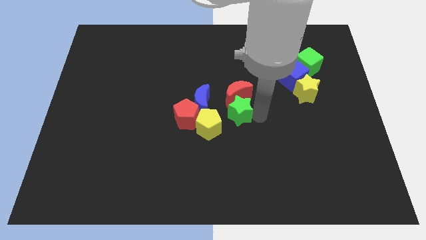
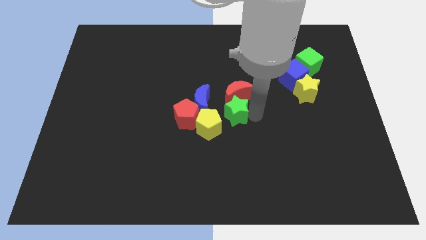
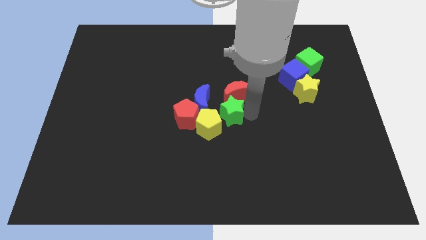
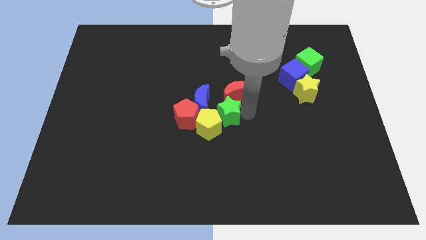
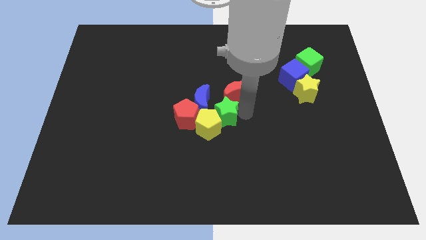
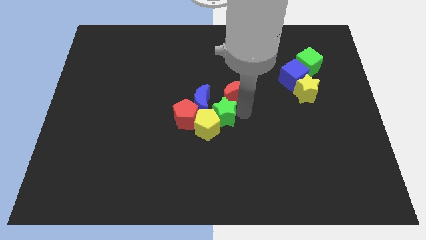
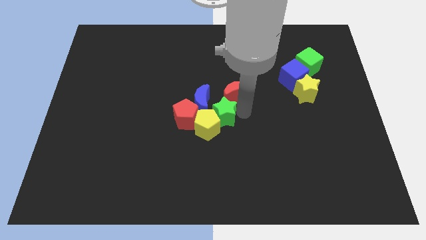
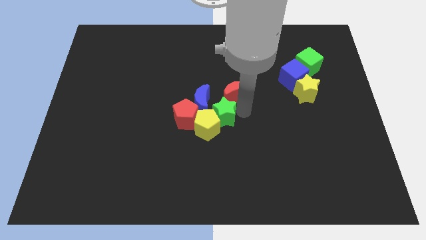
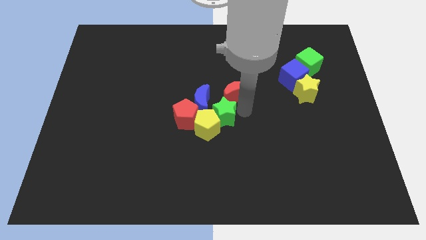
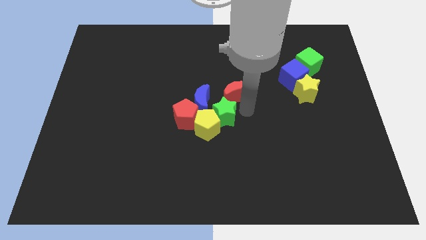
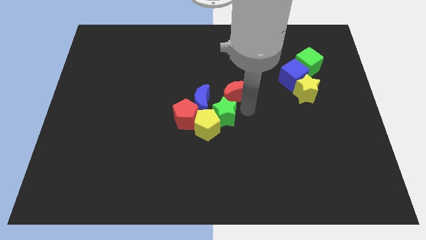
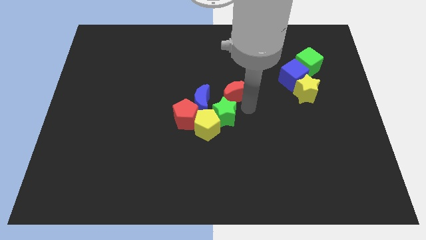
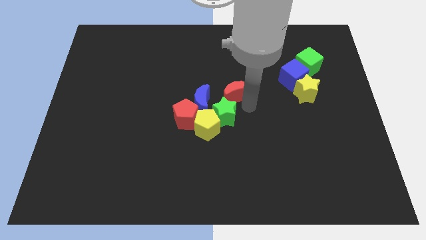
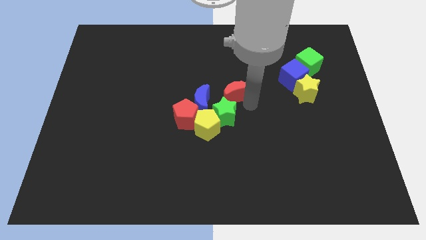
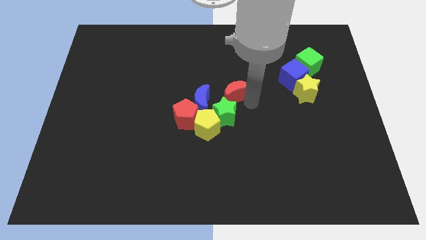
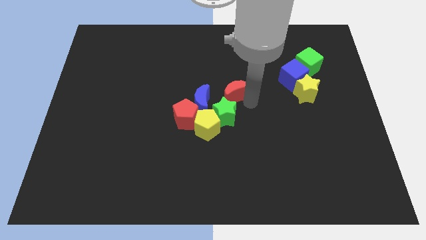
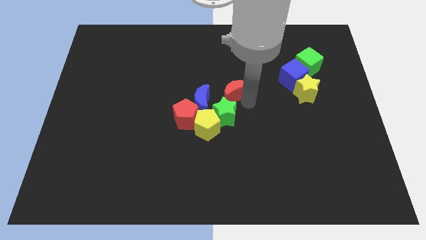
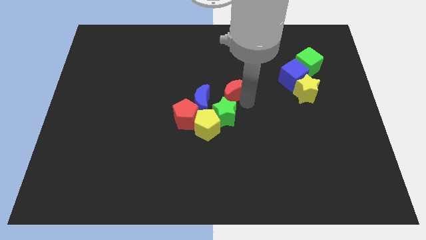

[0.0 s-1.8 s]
push the green star into the yellow pentagon

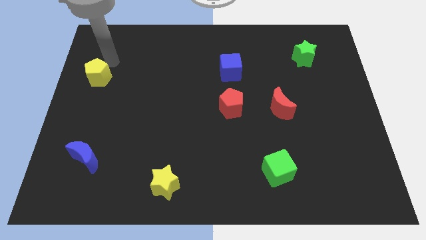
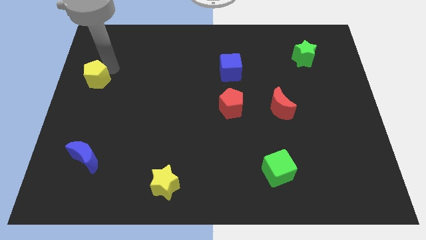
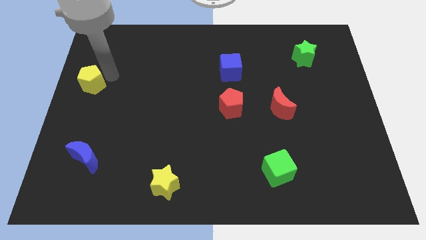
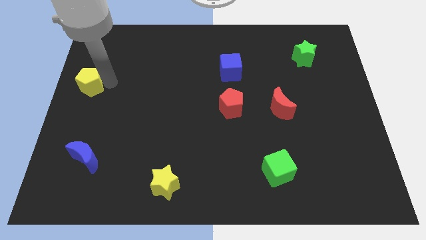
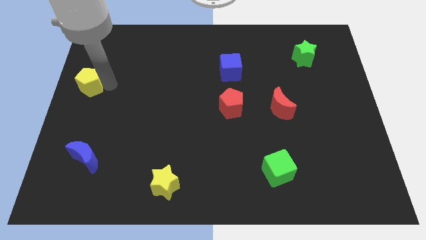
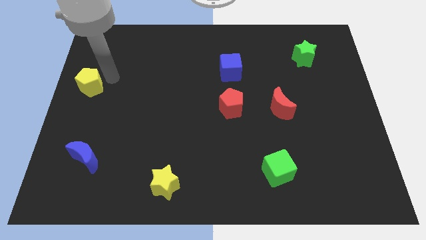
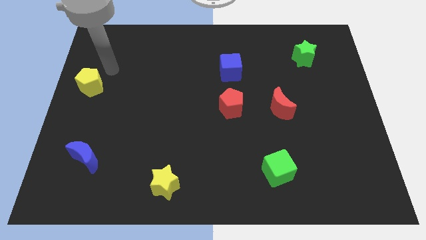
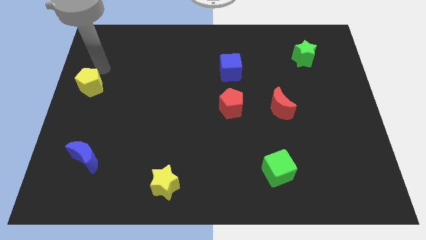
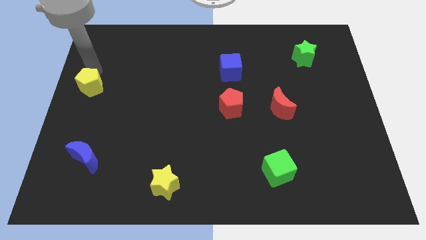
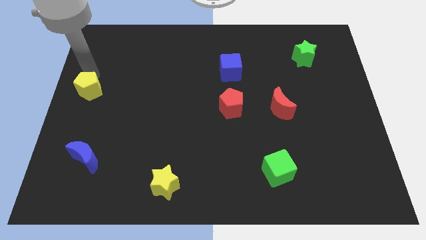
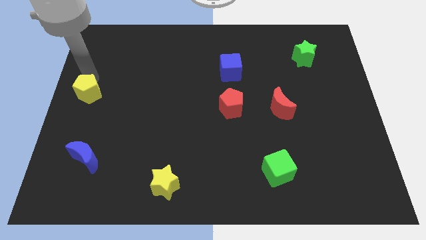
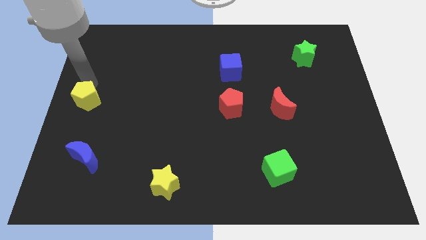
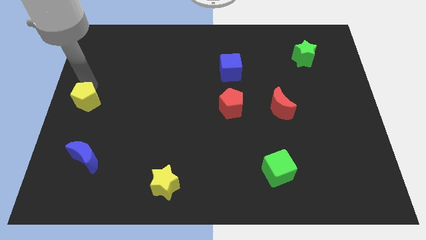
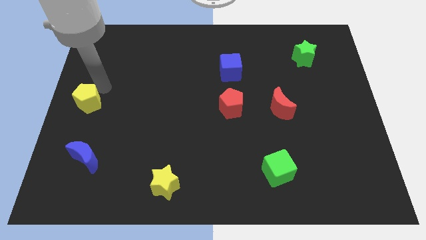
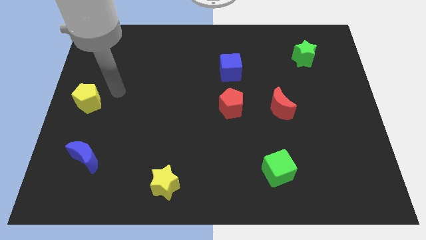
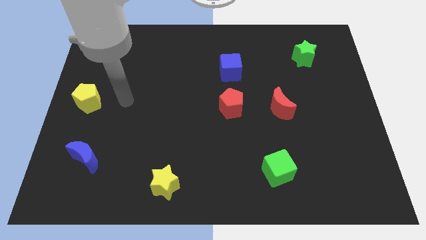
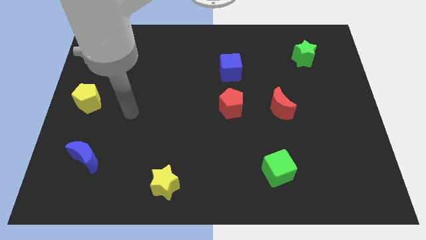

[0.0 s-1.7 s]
push the yellow pentagon downwards slightly

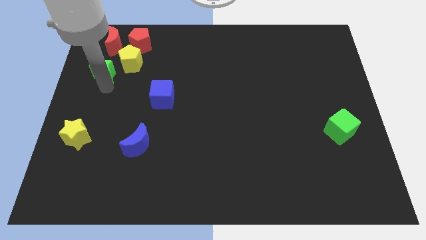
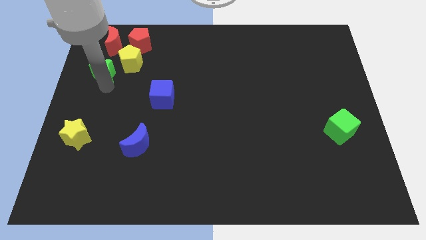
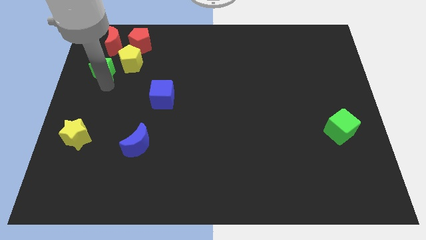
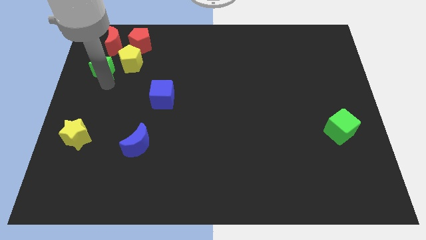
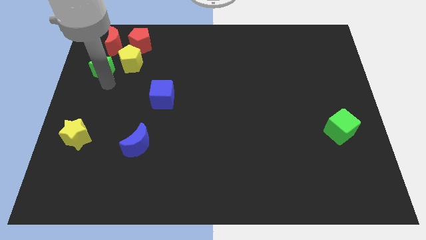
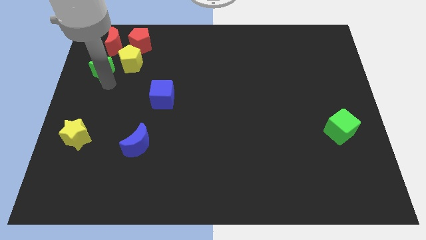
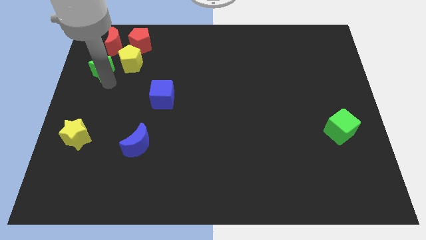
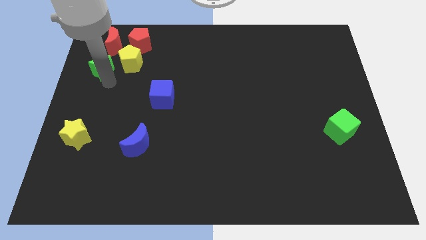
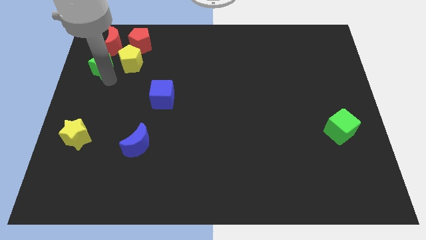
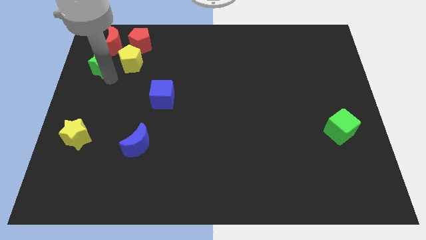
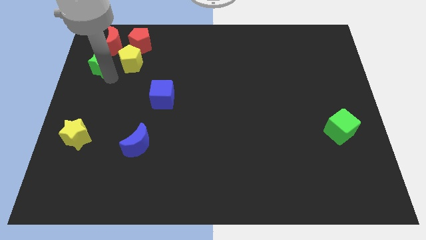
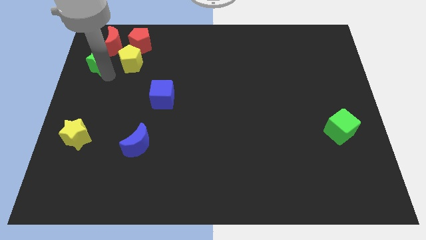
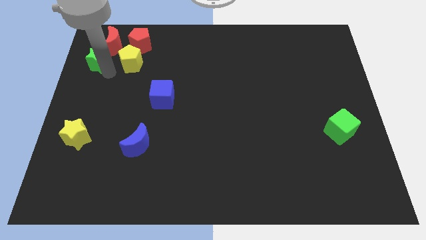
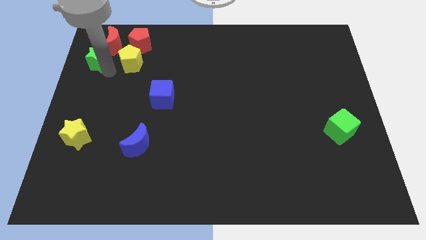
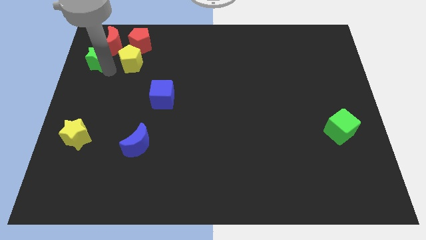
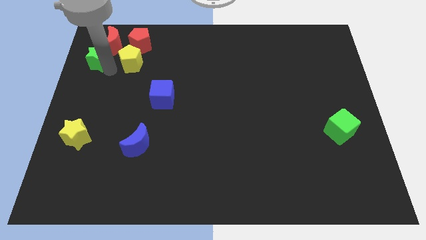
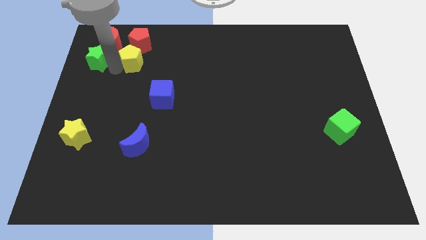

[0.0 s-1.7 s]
place the green star at the left side of the yellow pentagon

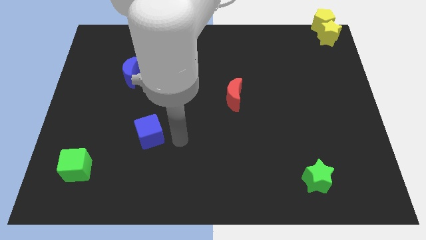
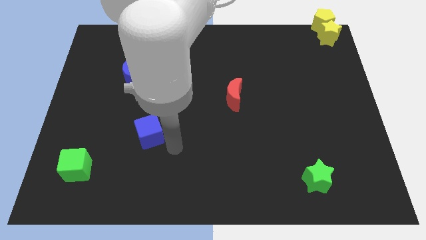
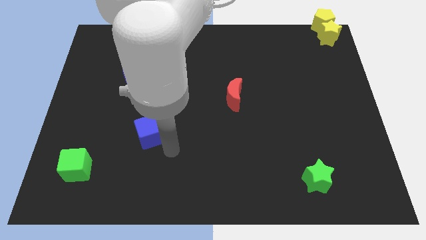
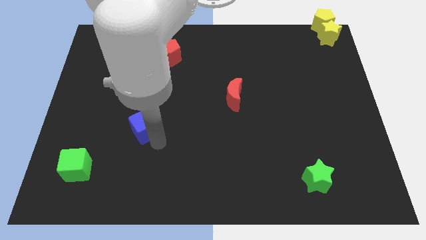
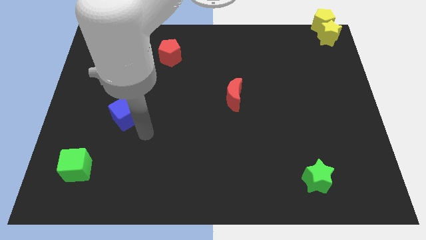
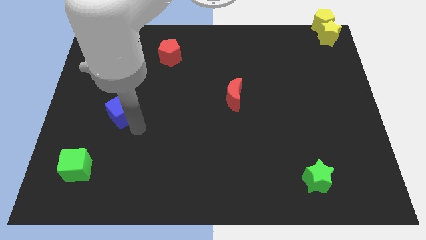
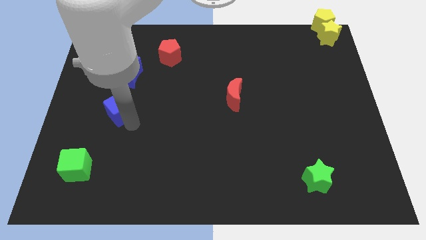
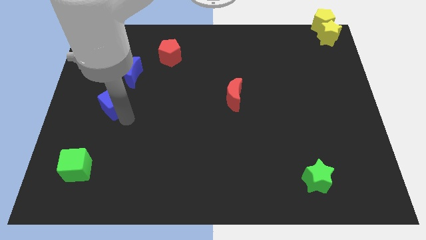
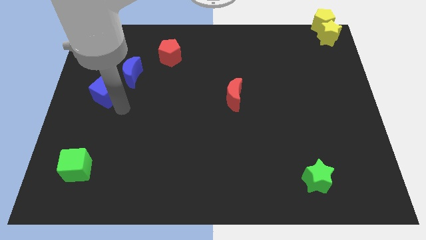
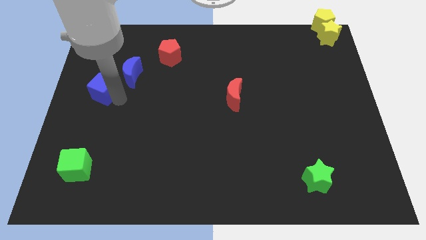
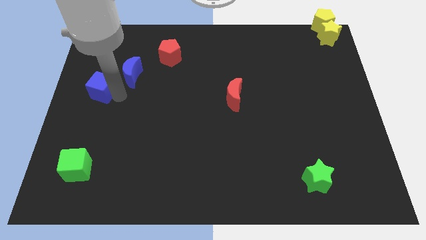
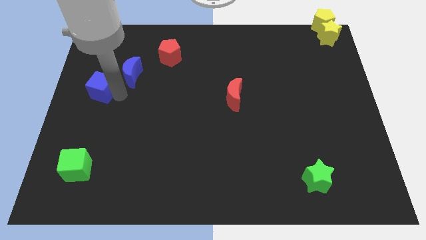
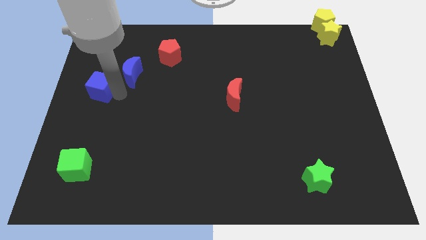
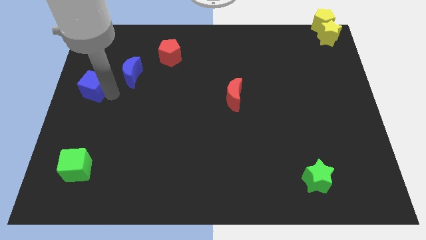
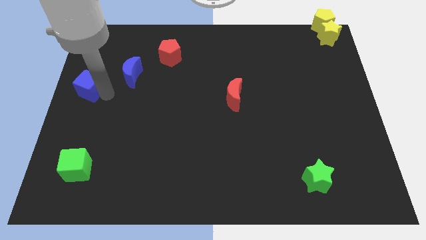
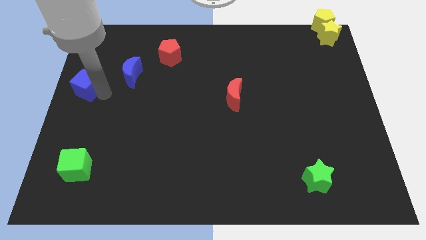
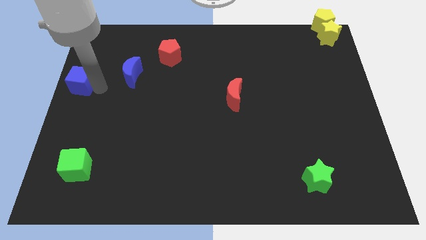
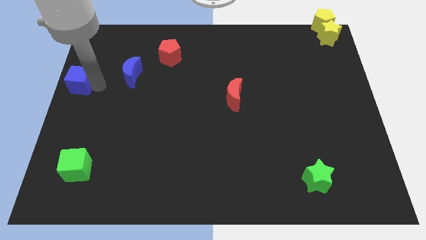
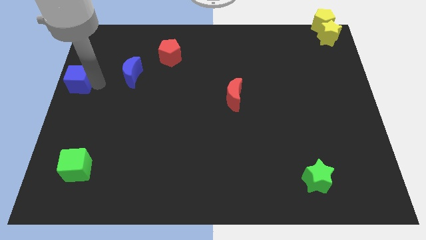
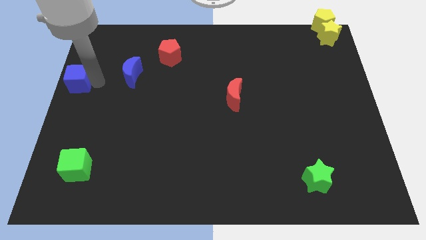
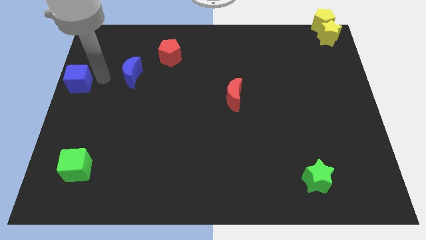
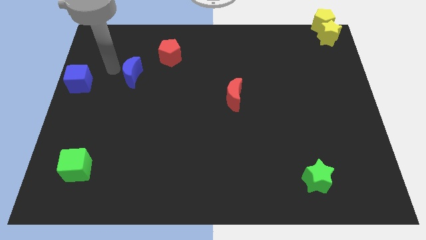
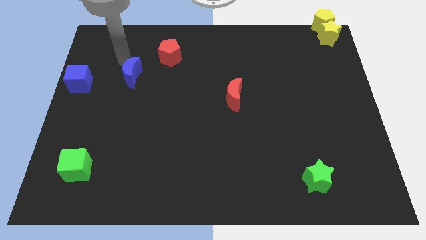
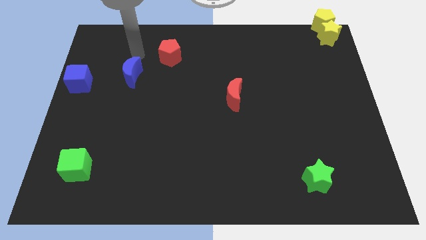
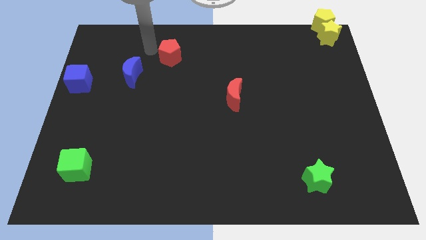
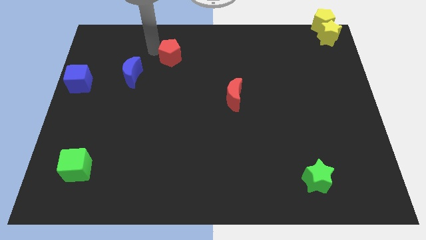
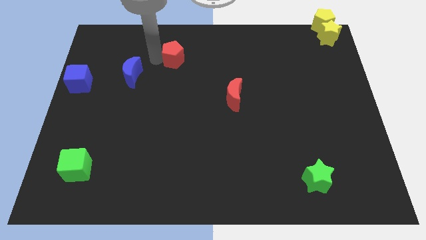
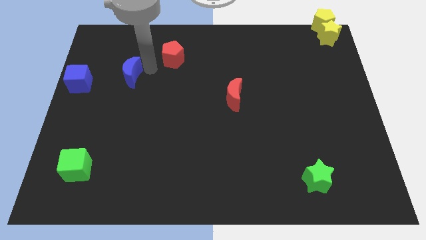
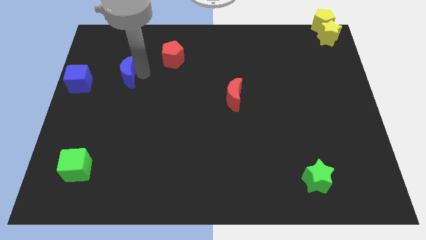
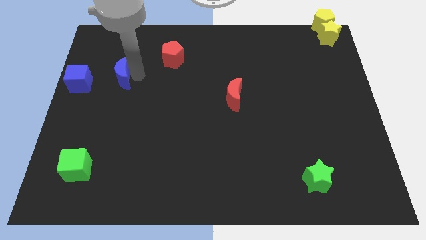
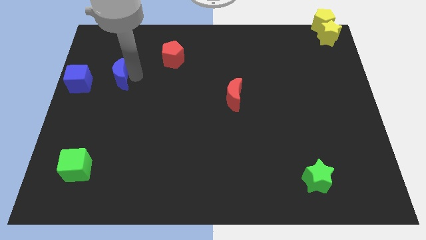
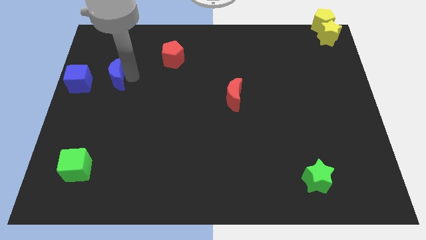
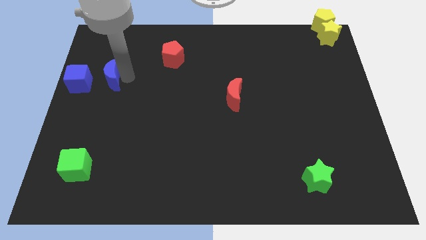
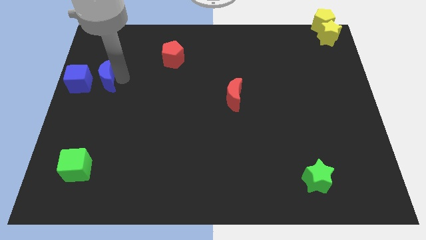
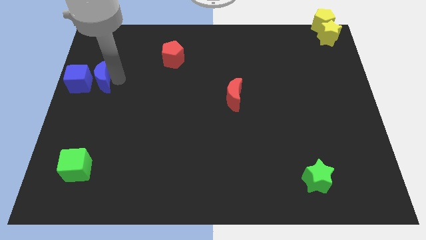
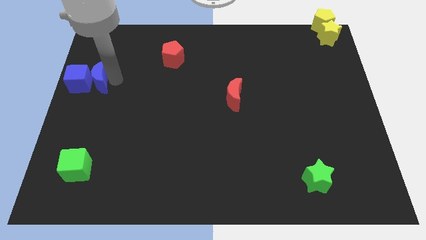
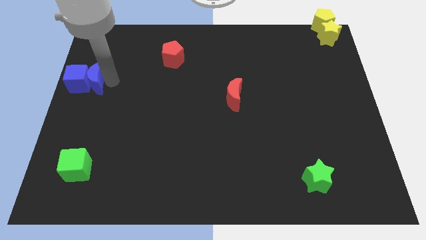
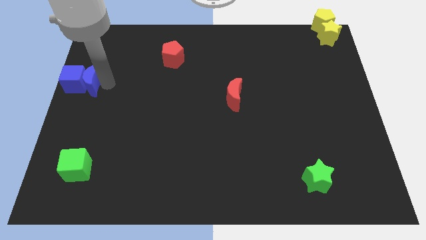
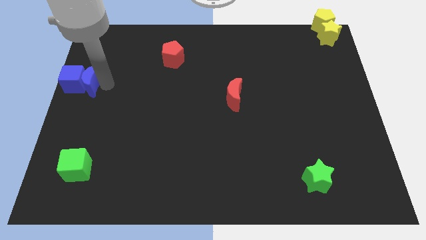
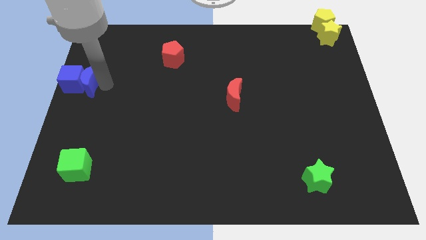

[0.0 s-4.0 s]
push the blue moon towards the right of the blue crescent
